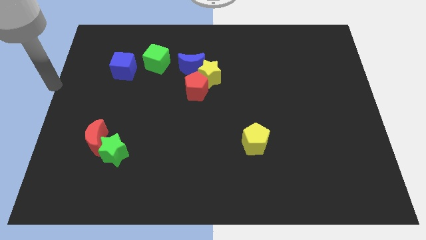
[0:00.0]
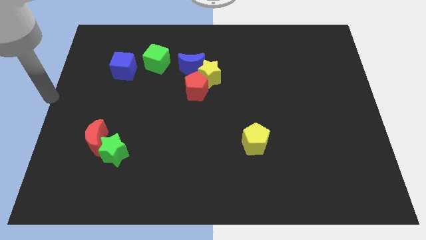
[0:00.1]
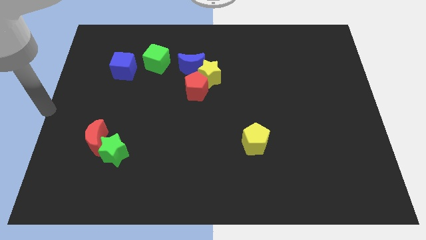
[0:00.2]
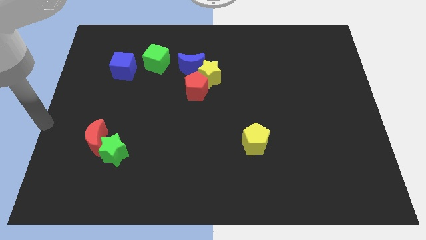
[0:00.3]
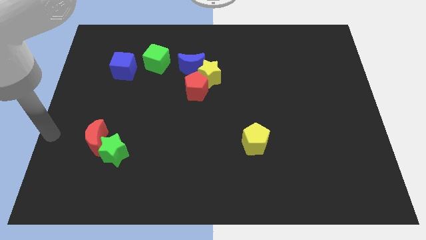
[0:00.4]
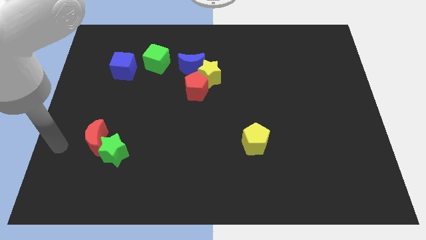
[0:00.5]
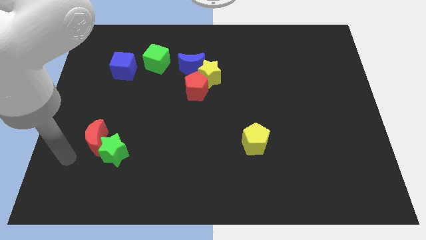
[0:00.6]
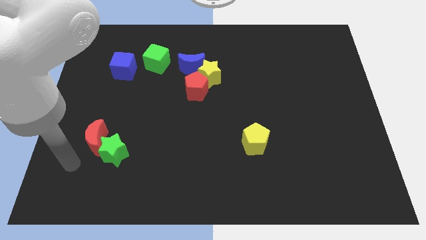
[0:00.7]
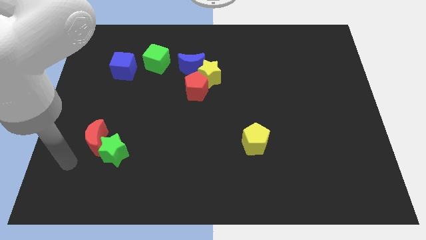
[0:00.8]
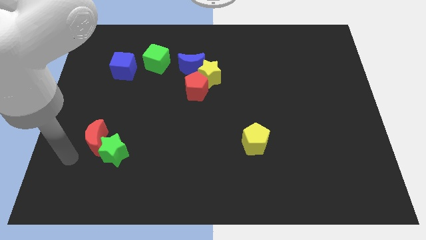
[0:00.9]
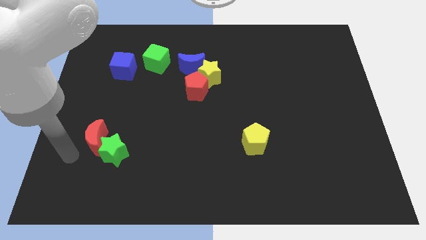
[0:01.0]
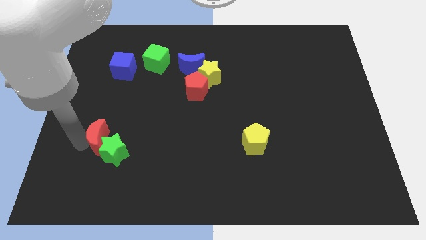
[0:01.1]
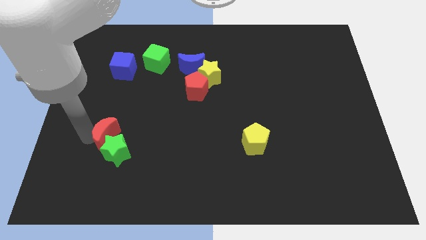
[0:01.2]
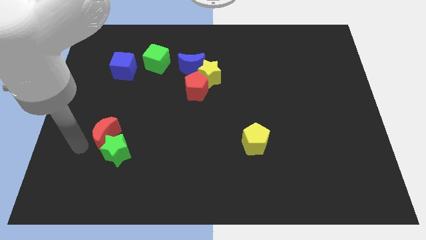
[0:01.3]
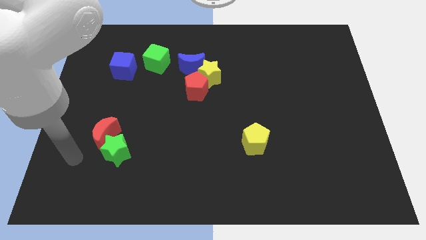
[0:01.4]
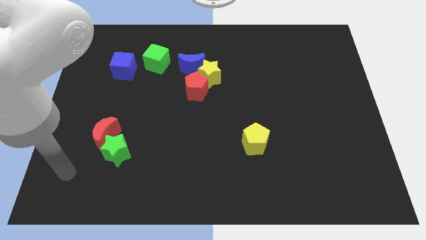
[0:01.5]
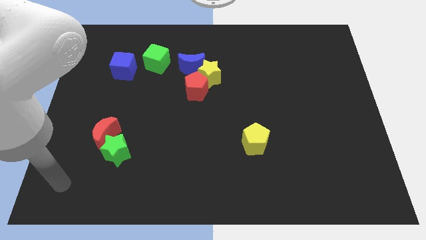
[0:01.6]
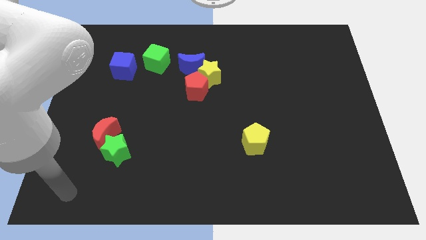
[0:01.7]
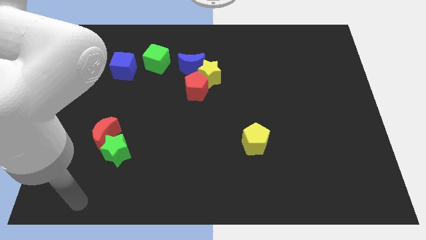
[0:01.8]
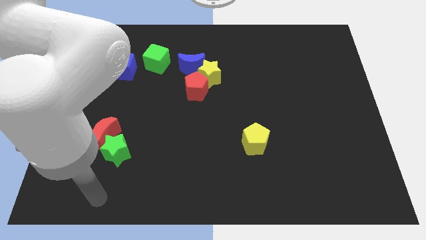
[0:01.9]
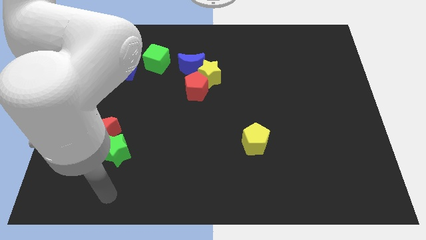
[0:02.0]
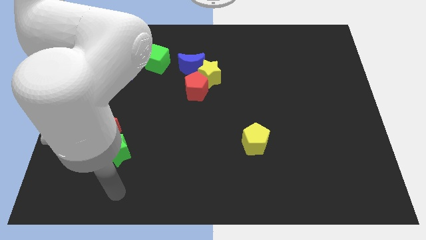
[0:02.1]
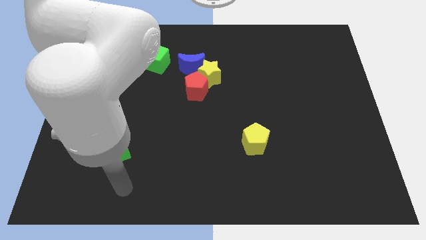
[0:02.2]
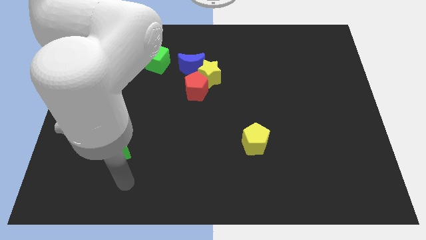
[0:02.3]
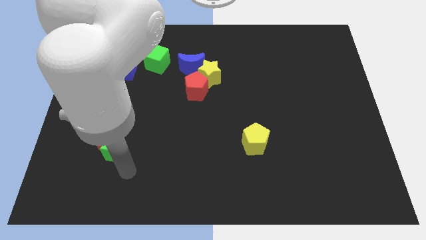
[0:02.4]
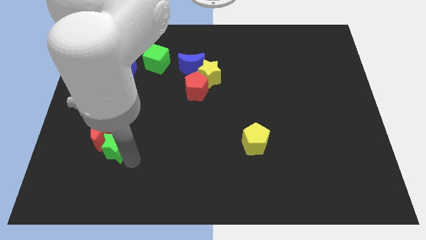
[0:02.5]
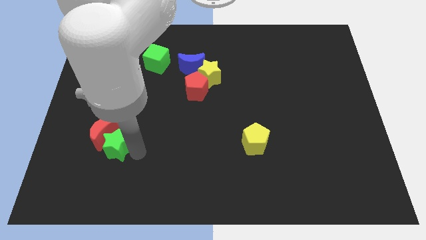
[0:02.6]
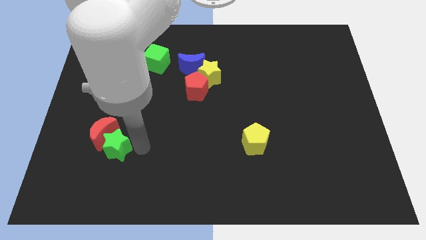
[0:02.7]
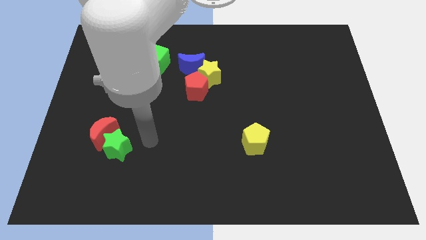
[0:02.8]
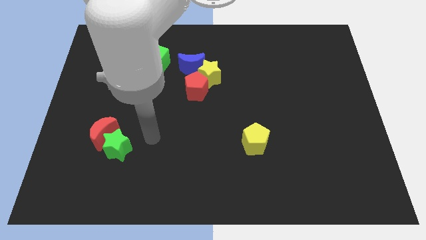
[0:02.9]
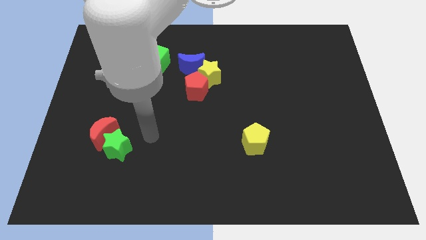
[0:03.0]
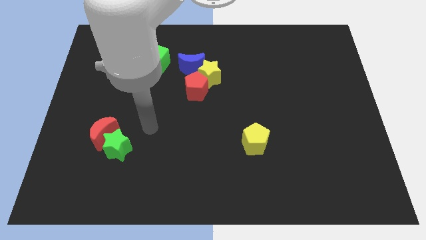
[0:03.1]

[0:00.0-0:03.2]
slightly push the red crescent and green star at the bottom left of the board

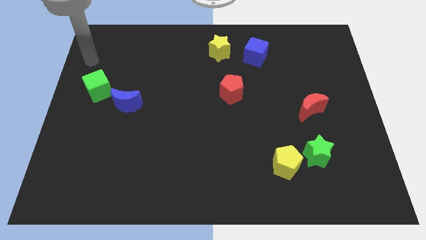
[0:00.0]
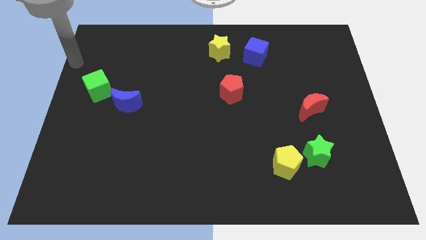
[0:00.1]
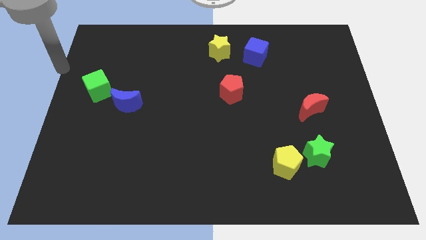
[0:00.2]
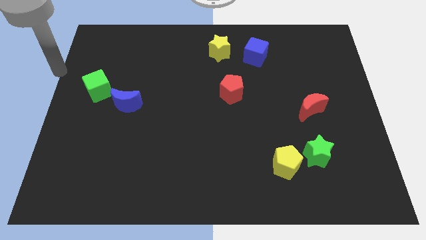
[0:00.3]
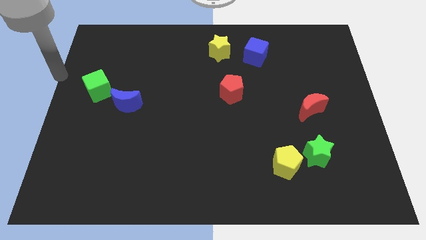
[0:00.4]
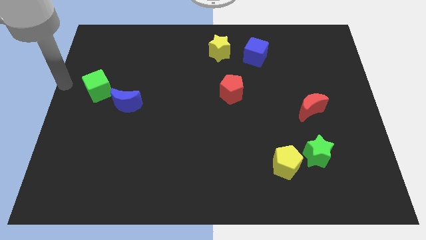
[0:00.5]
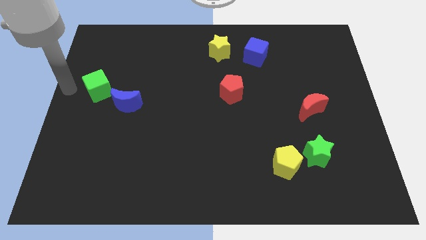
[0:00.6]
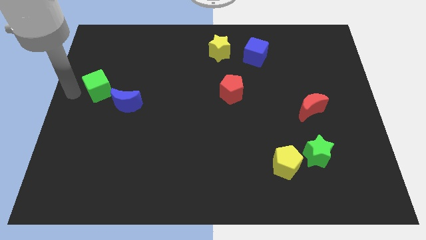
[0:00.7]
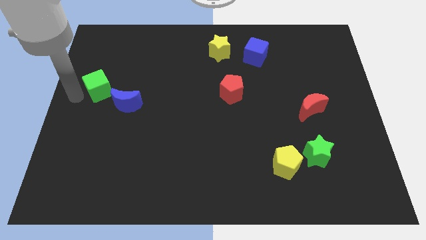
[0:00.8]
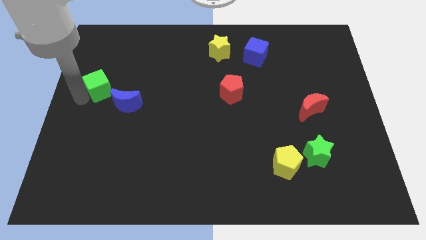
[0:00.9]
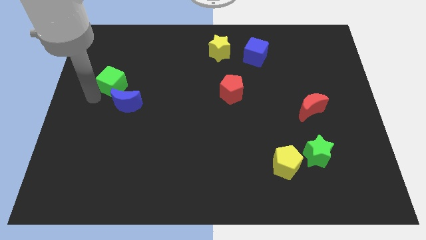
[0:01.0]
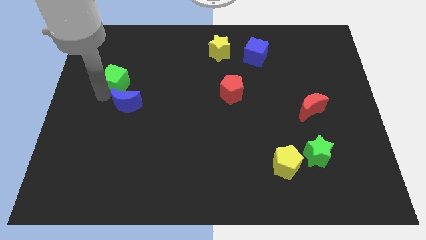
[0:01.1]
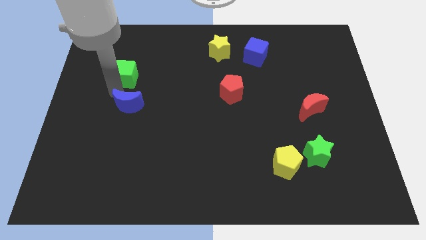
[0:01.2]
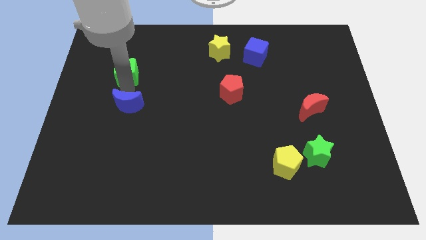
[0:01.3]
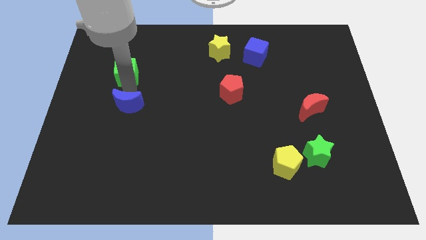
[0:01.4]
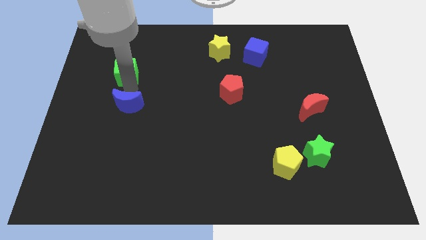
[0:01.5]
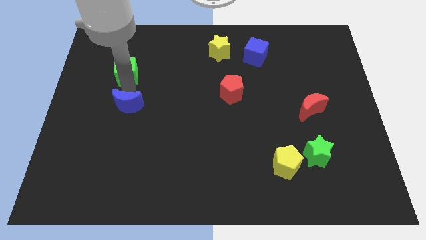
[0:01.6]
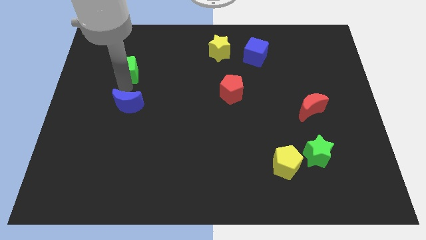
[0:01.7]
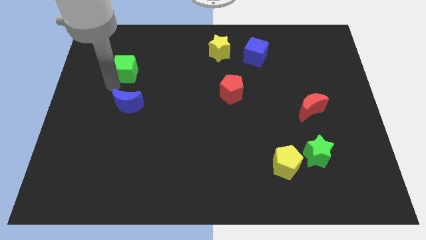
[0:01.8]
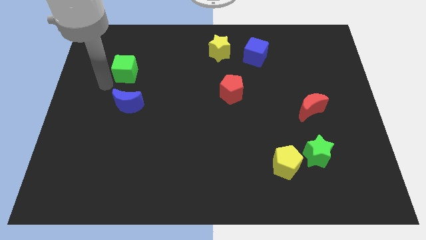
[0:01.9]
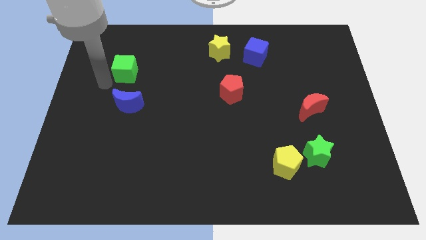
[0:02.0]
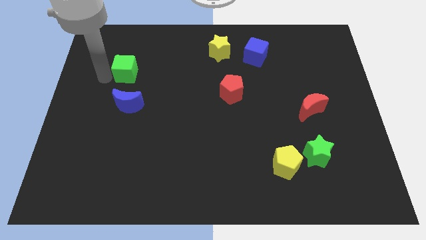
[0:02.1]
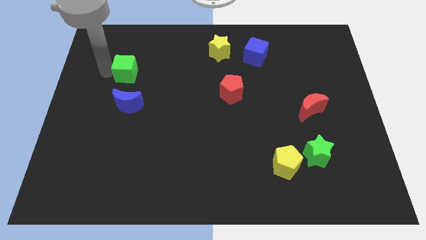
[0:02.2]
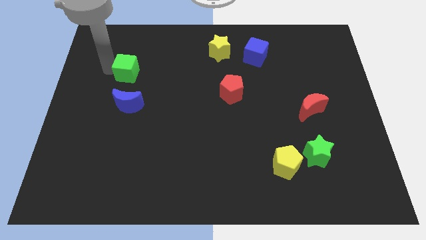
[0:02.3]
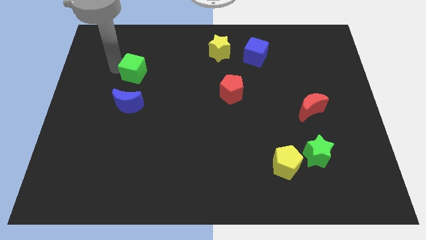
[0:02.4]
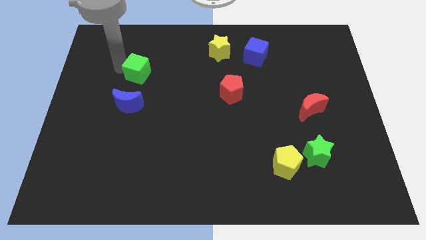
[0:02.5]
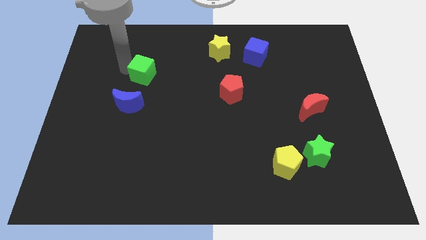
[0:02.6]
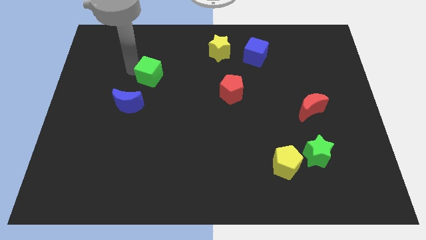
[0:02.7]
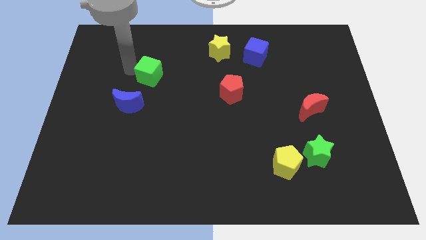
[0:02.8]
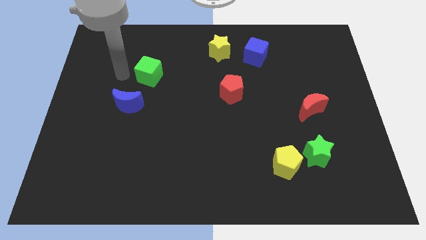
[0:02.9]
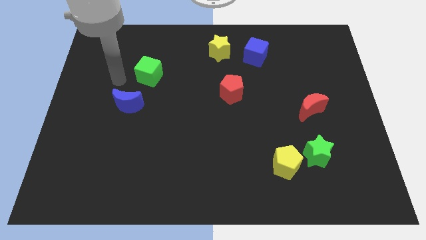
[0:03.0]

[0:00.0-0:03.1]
separate green cube from blue moon

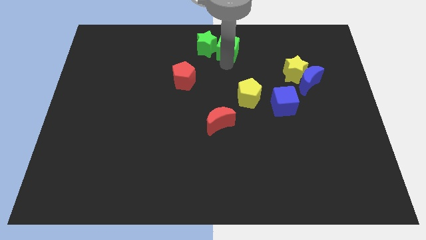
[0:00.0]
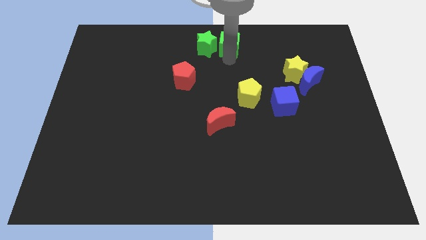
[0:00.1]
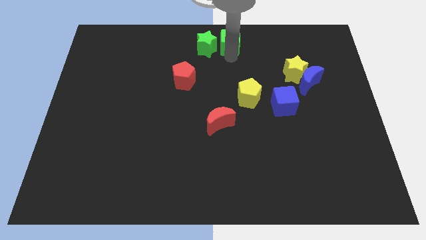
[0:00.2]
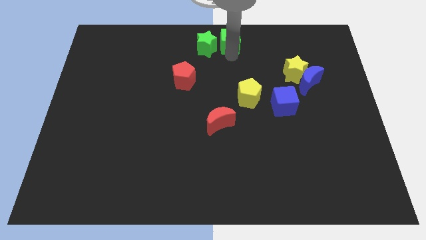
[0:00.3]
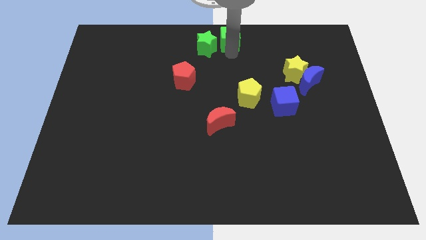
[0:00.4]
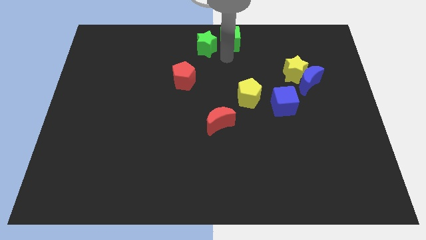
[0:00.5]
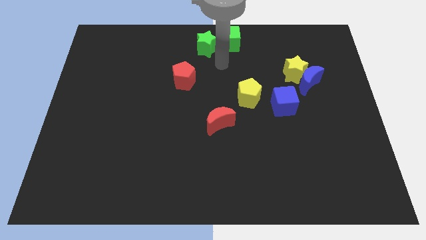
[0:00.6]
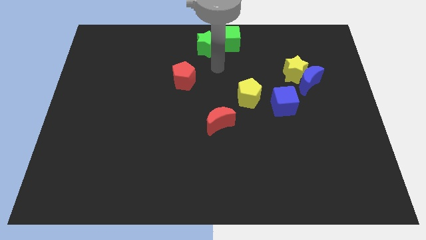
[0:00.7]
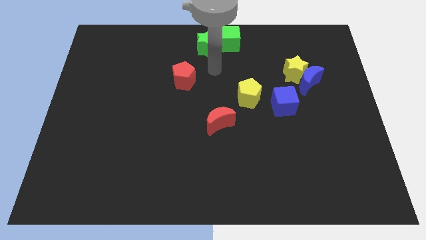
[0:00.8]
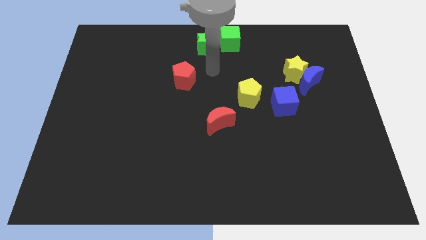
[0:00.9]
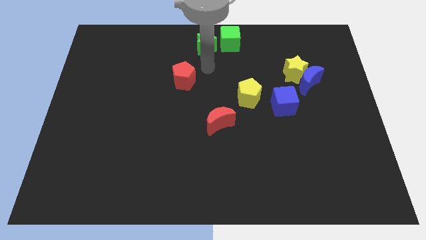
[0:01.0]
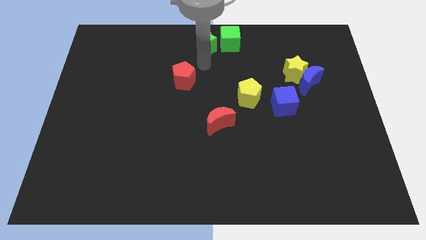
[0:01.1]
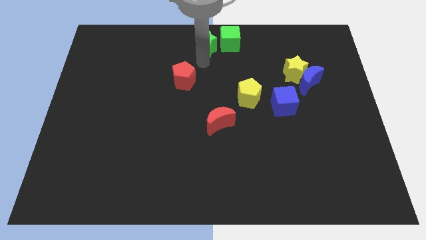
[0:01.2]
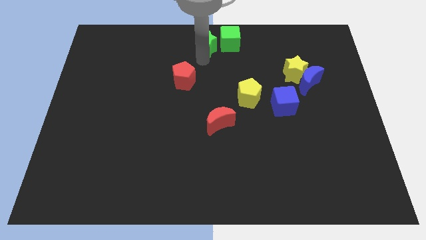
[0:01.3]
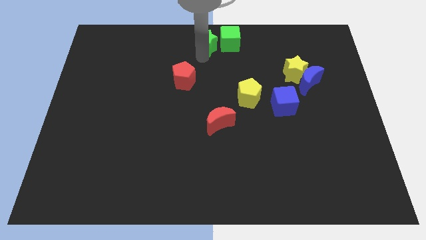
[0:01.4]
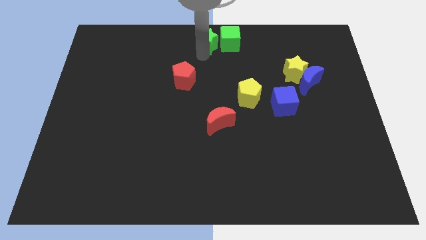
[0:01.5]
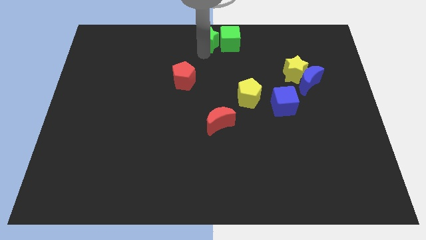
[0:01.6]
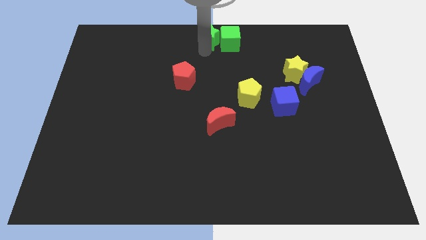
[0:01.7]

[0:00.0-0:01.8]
adjust the green star and green cube at the top centre of the board

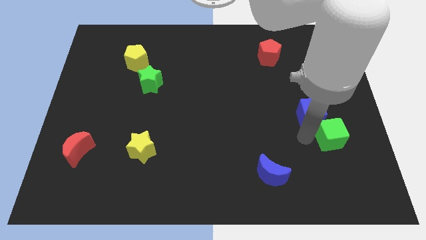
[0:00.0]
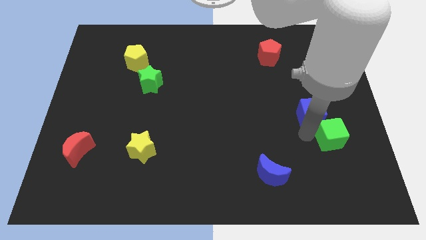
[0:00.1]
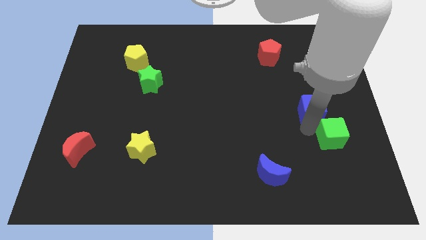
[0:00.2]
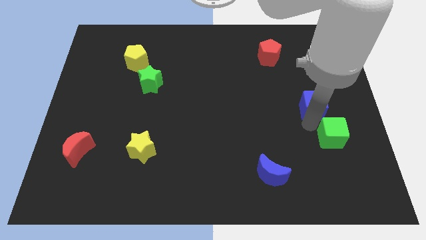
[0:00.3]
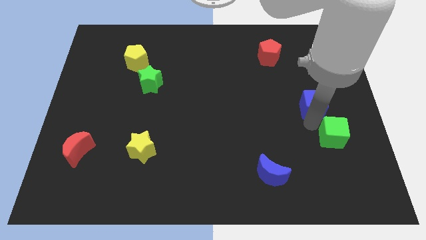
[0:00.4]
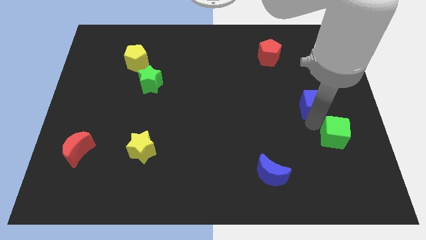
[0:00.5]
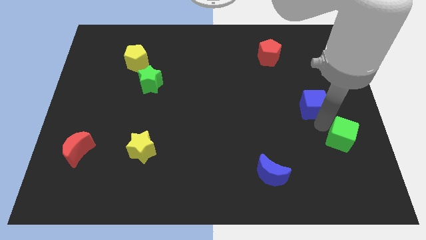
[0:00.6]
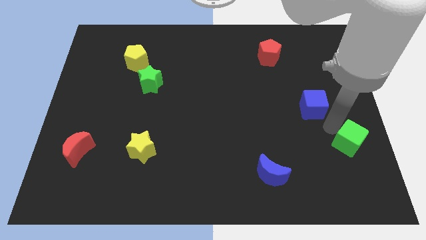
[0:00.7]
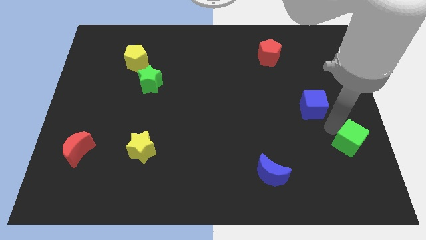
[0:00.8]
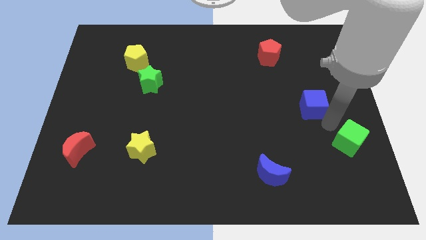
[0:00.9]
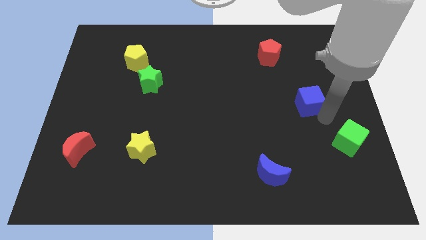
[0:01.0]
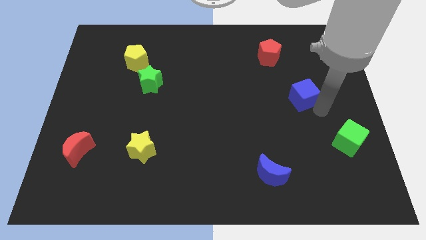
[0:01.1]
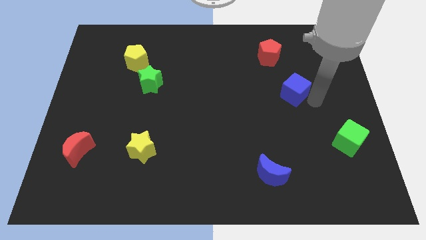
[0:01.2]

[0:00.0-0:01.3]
separate the blue cube from green cube
